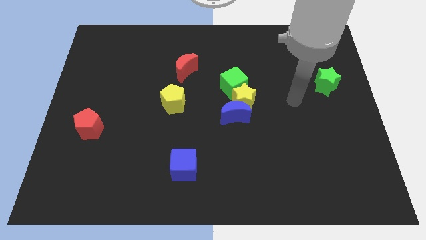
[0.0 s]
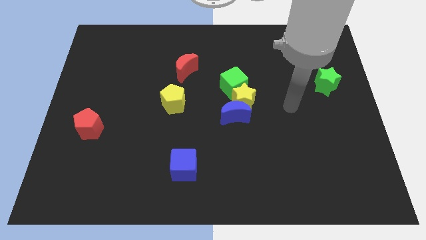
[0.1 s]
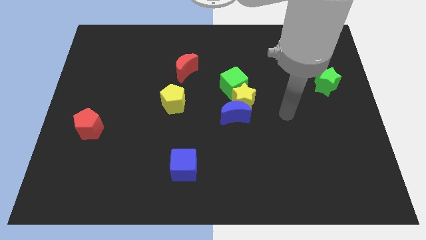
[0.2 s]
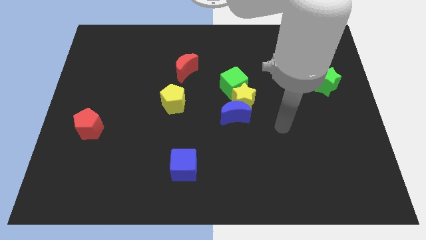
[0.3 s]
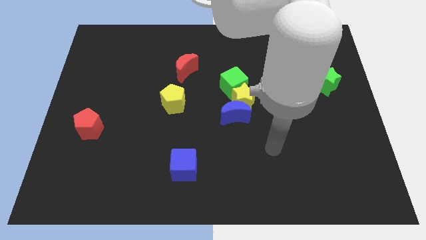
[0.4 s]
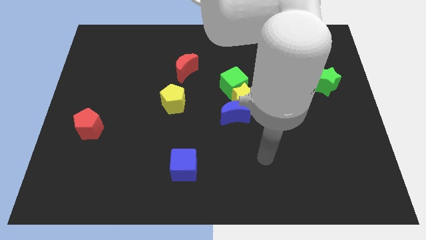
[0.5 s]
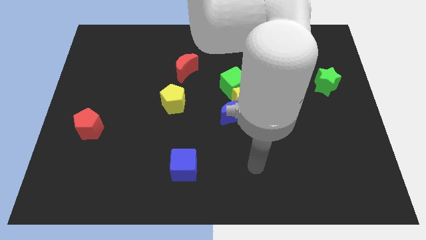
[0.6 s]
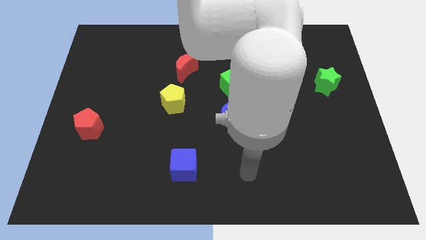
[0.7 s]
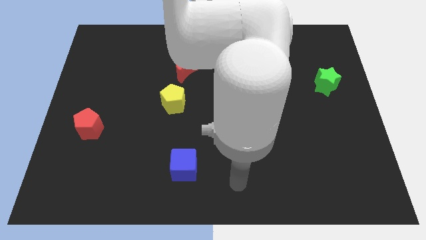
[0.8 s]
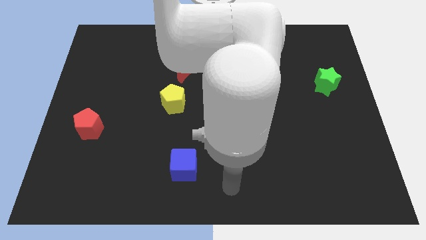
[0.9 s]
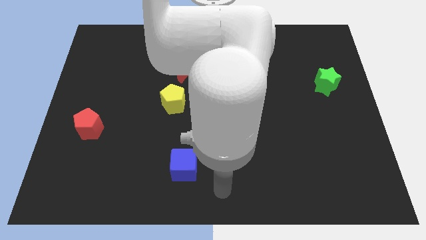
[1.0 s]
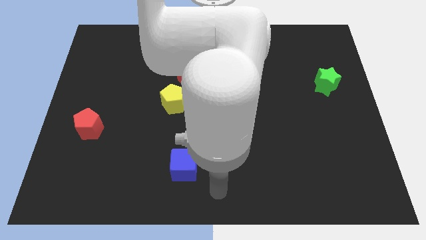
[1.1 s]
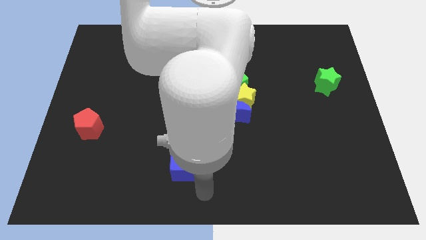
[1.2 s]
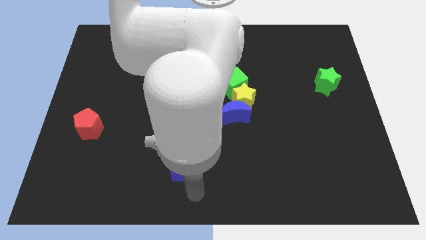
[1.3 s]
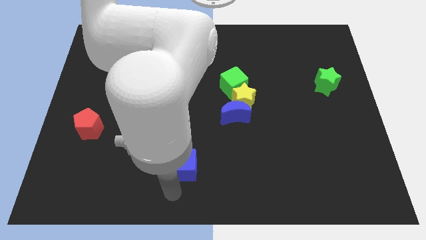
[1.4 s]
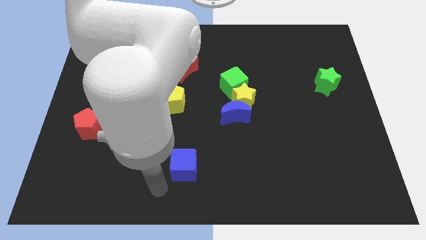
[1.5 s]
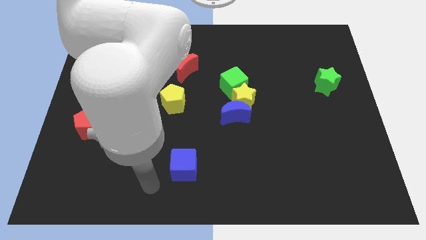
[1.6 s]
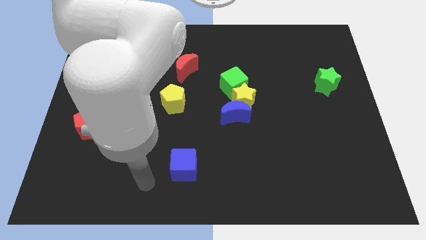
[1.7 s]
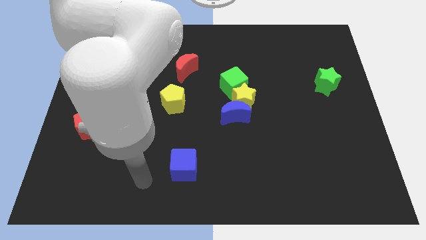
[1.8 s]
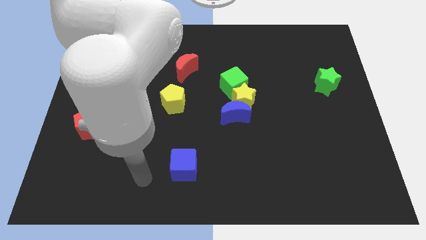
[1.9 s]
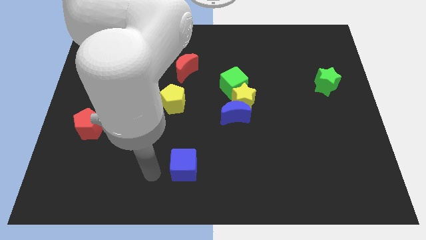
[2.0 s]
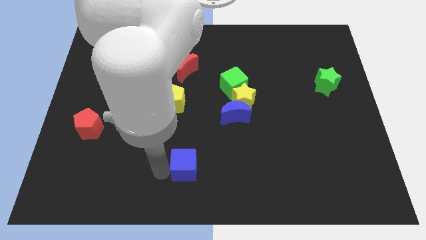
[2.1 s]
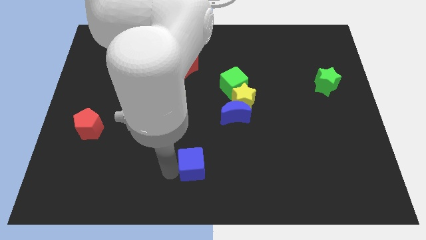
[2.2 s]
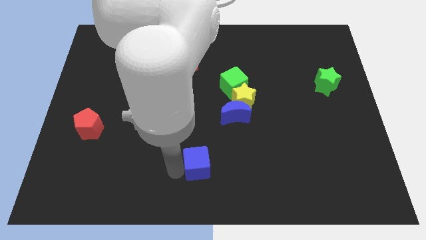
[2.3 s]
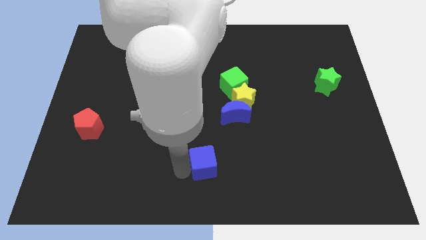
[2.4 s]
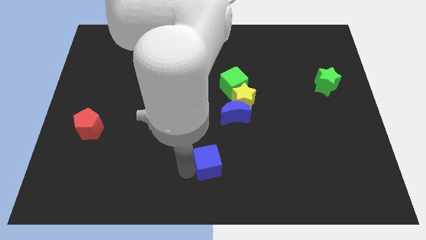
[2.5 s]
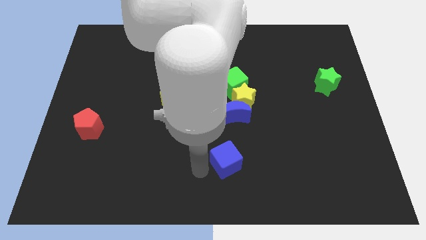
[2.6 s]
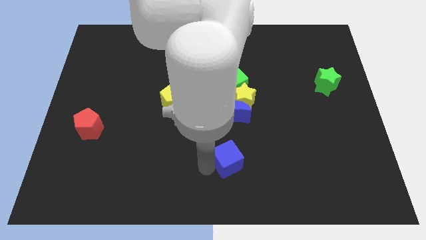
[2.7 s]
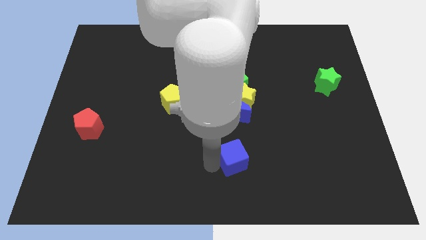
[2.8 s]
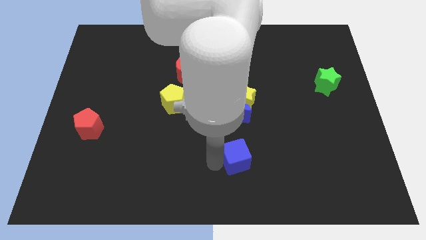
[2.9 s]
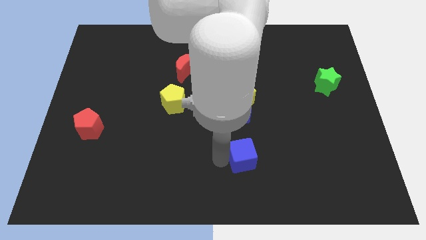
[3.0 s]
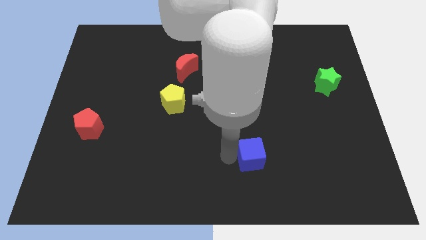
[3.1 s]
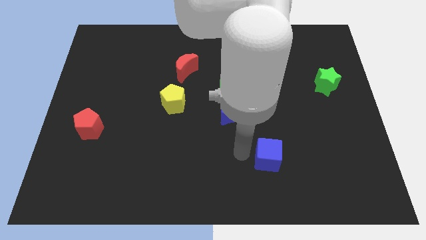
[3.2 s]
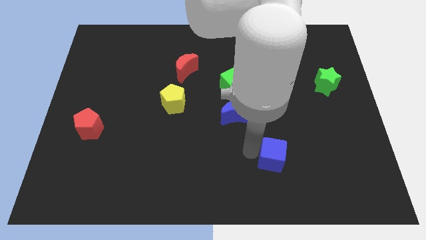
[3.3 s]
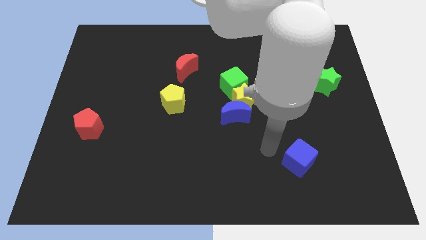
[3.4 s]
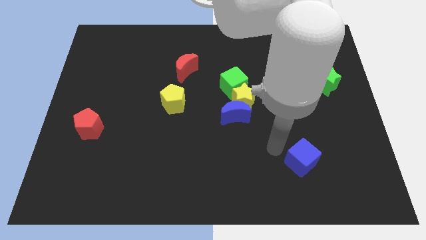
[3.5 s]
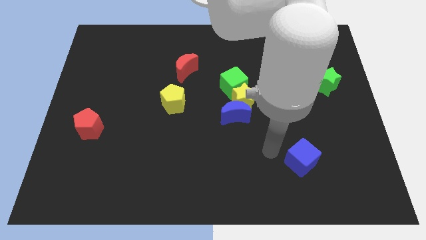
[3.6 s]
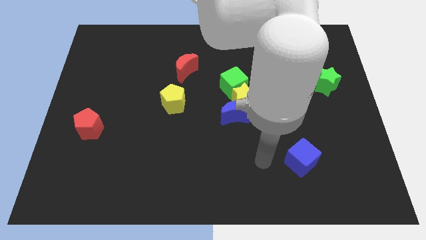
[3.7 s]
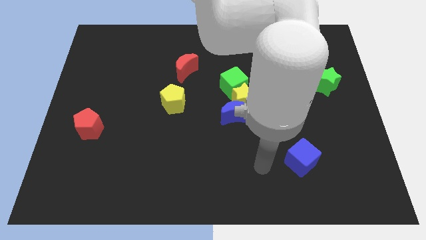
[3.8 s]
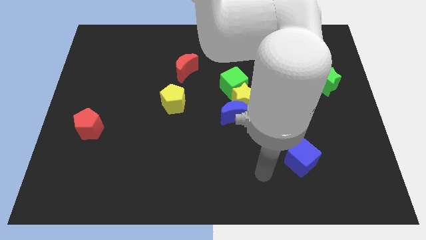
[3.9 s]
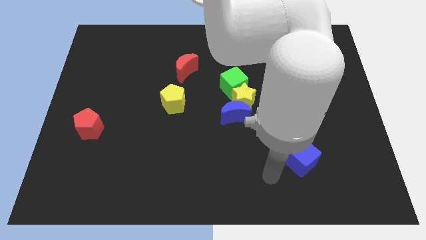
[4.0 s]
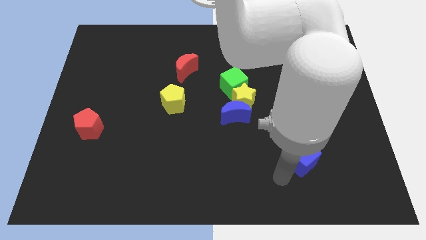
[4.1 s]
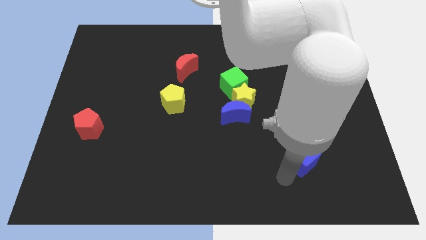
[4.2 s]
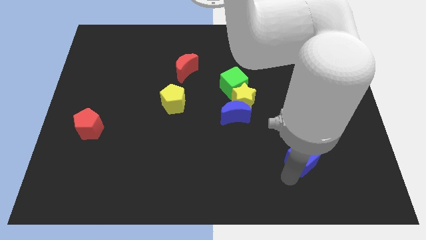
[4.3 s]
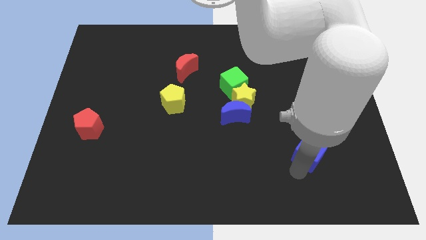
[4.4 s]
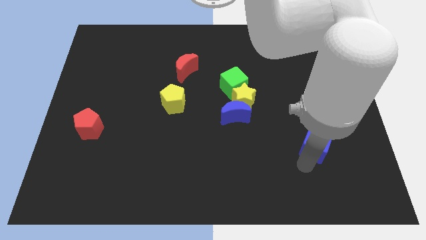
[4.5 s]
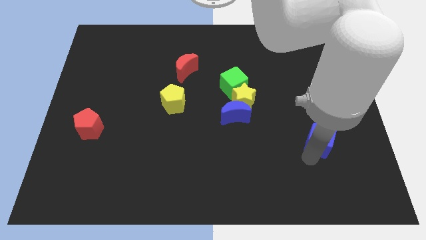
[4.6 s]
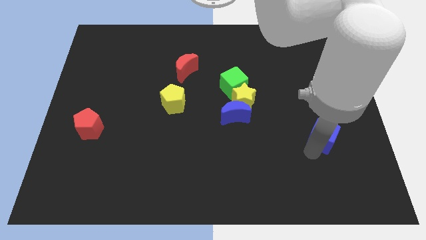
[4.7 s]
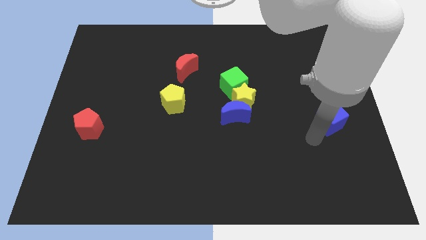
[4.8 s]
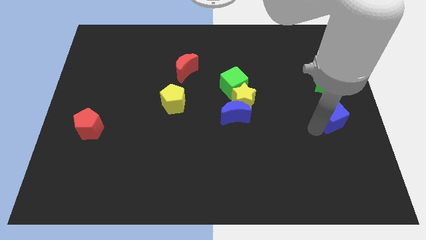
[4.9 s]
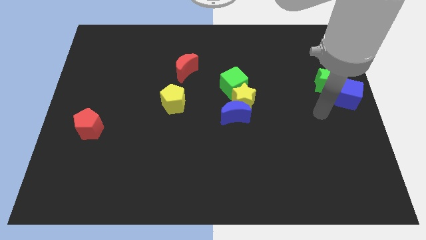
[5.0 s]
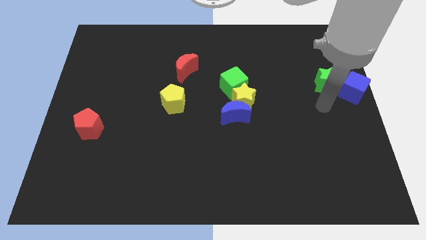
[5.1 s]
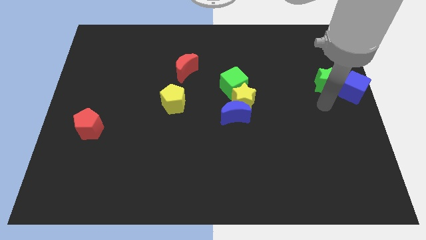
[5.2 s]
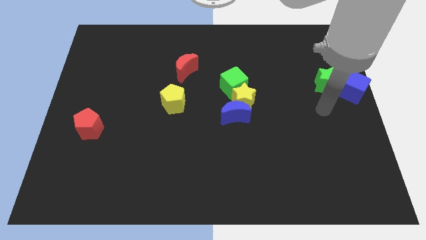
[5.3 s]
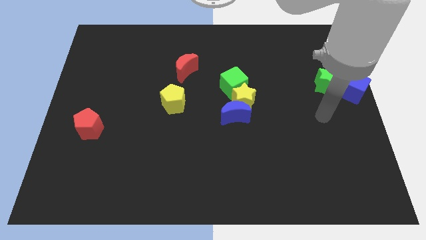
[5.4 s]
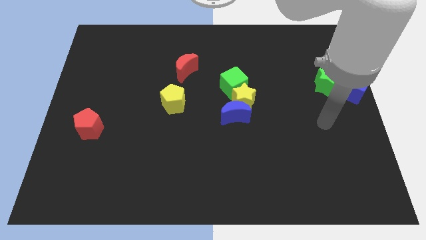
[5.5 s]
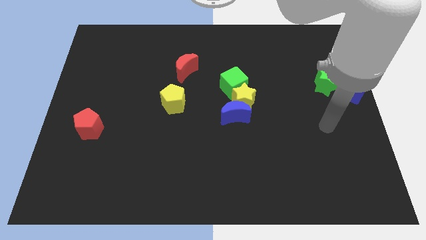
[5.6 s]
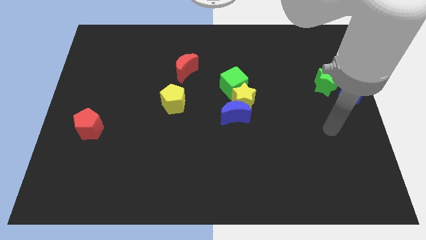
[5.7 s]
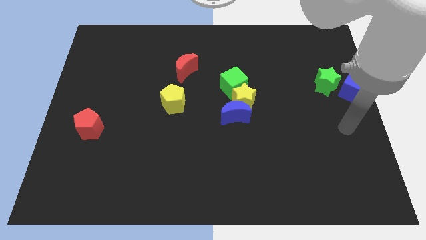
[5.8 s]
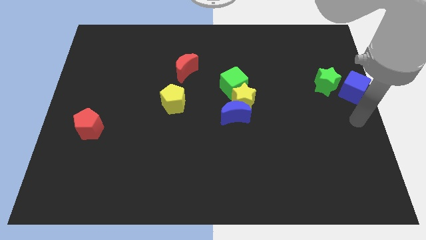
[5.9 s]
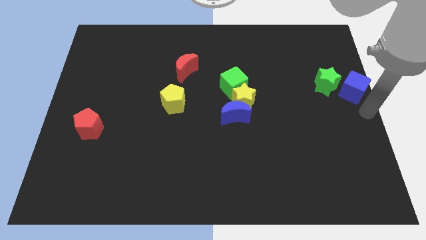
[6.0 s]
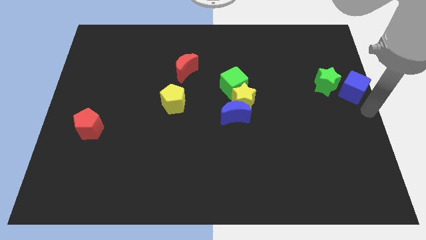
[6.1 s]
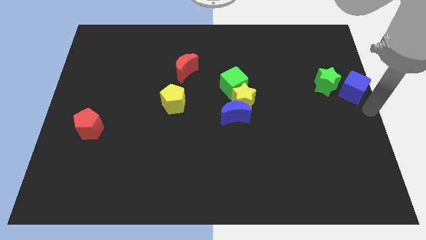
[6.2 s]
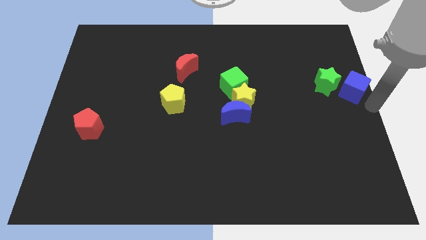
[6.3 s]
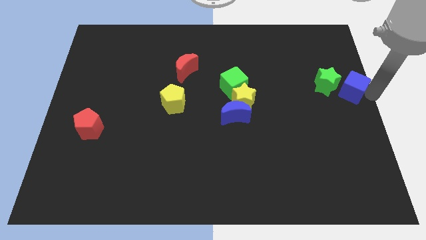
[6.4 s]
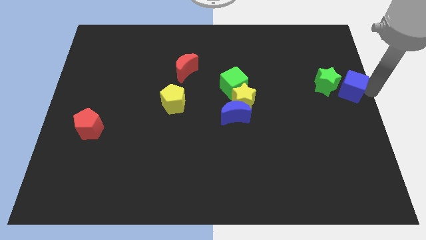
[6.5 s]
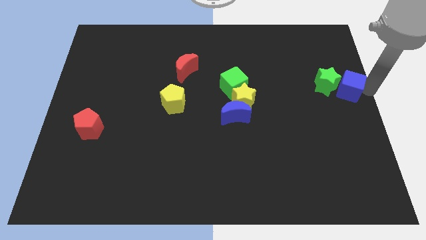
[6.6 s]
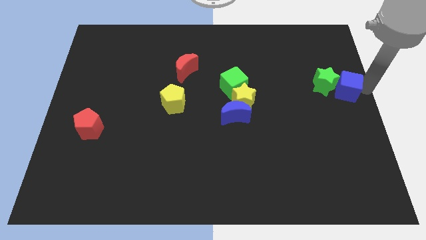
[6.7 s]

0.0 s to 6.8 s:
put the blue cube next to the green star

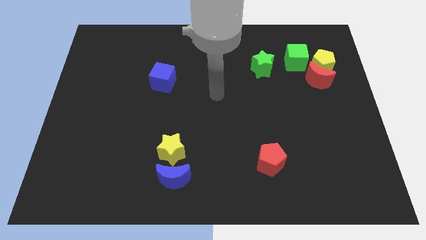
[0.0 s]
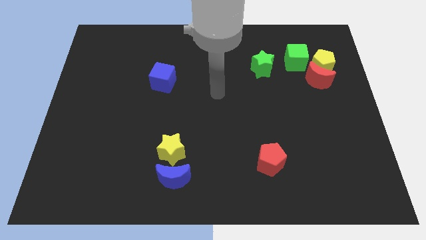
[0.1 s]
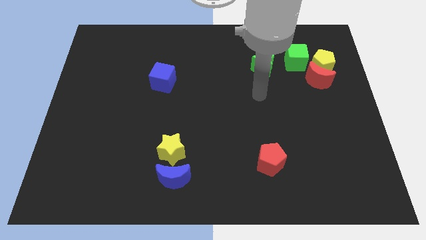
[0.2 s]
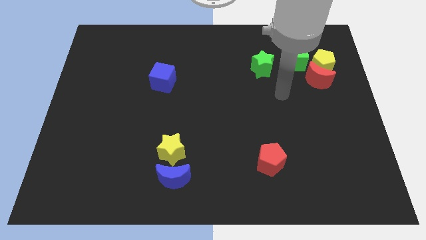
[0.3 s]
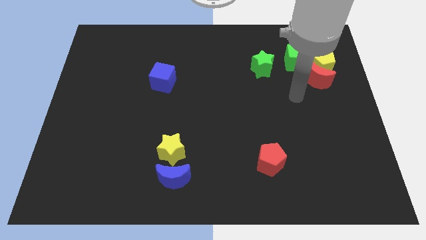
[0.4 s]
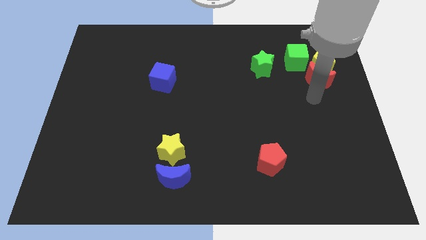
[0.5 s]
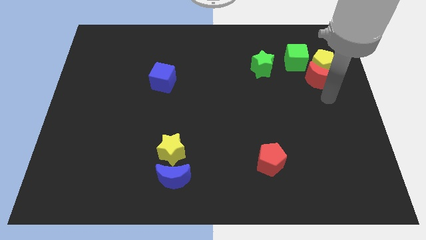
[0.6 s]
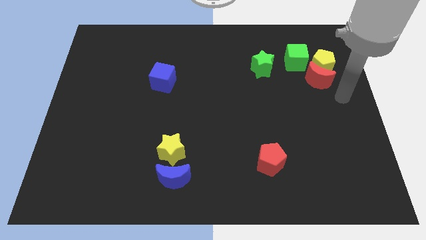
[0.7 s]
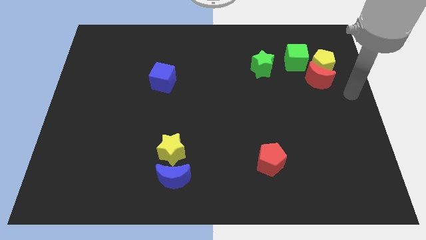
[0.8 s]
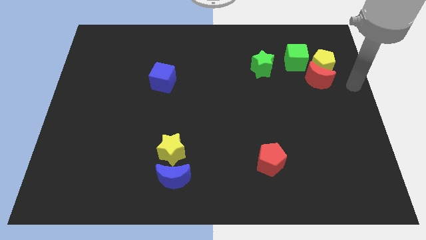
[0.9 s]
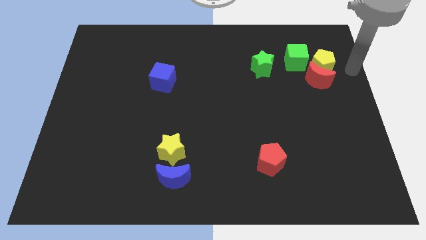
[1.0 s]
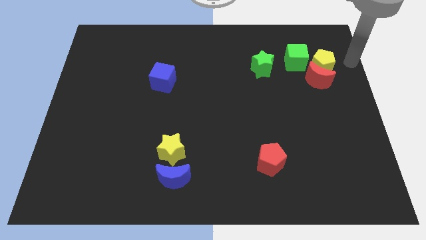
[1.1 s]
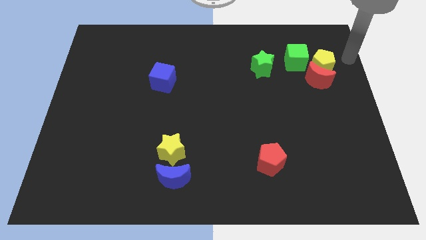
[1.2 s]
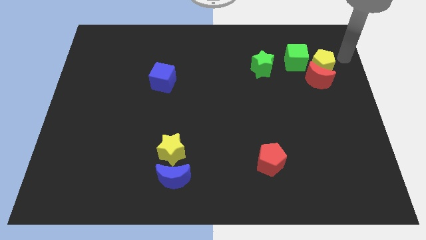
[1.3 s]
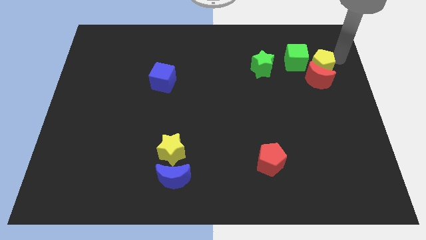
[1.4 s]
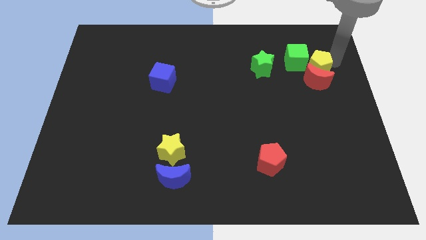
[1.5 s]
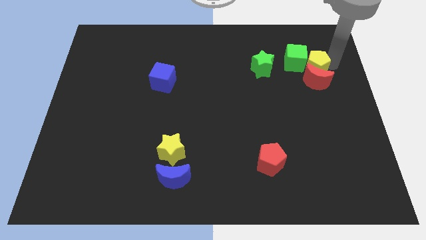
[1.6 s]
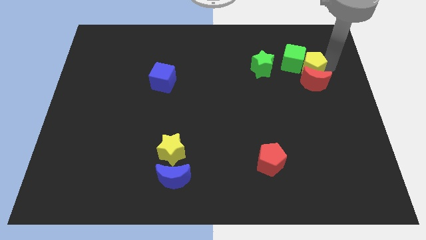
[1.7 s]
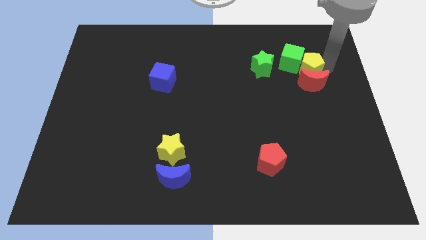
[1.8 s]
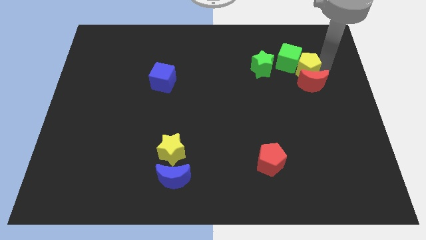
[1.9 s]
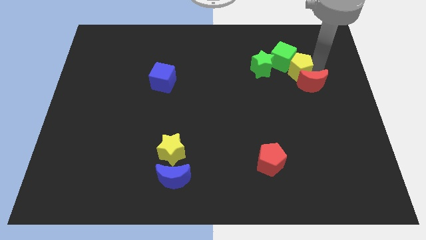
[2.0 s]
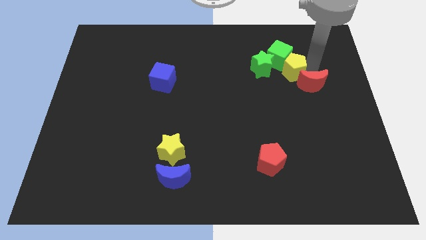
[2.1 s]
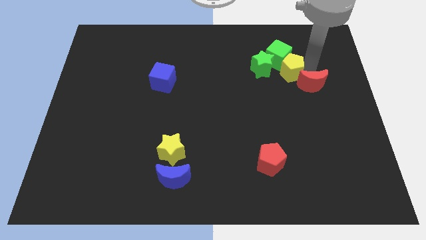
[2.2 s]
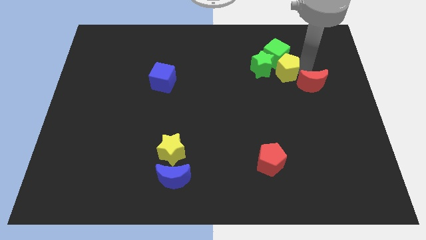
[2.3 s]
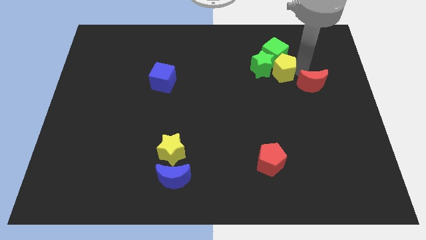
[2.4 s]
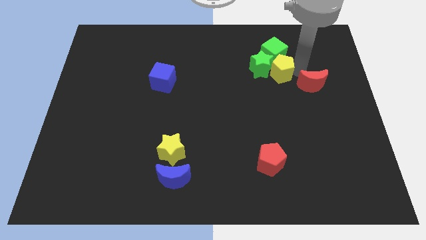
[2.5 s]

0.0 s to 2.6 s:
push the yellow pentagon close to the green star
